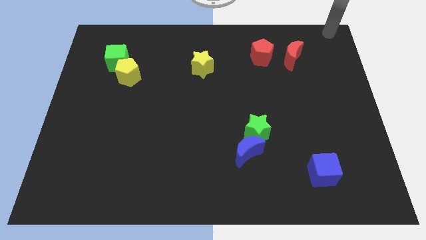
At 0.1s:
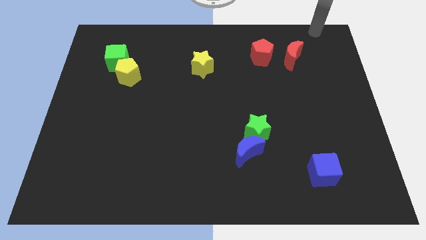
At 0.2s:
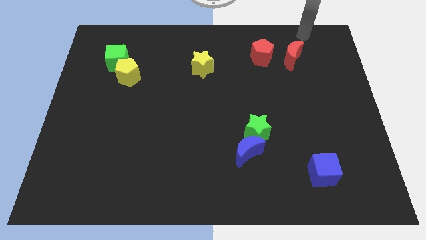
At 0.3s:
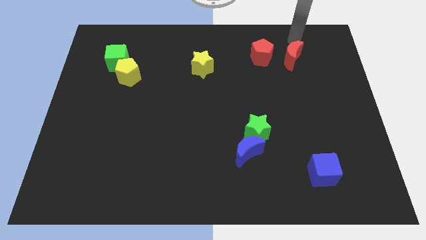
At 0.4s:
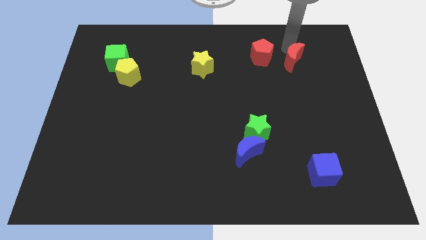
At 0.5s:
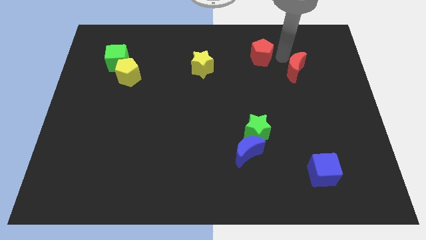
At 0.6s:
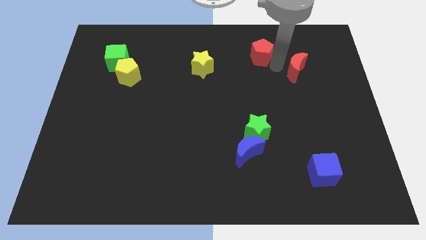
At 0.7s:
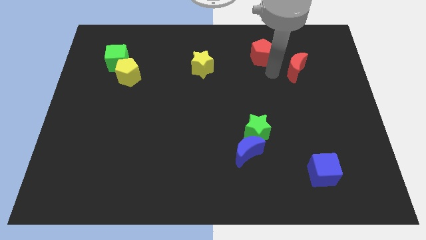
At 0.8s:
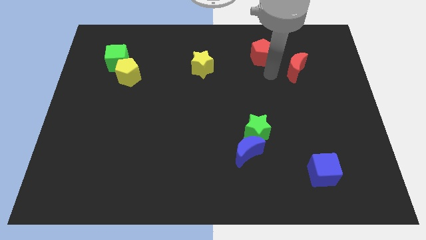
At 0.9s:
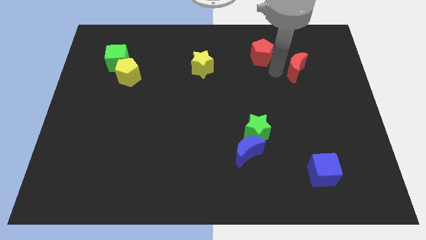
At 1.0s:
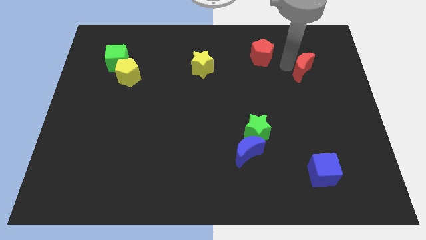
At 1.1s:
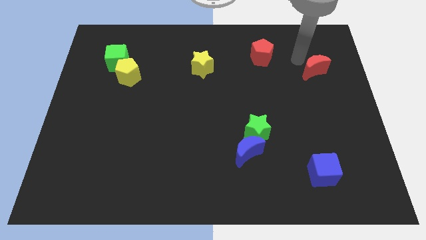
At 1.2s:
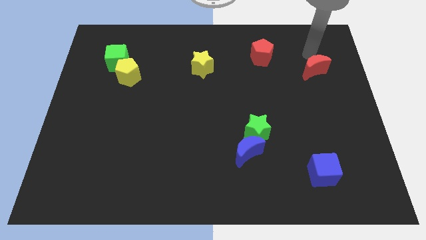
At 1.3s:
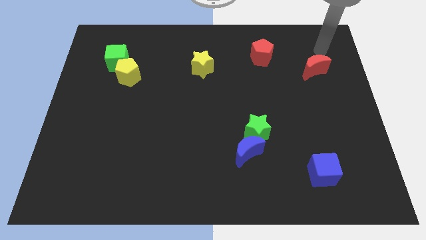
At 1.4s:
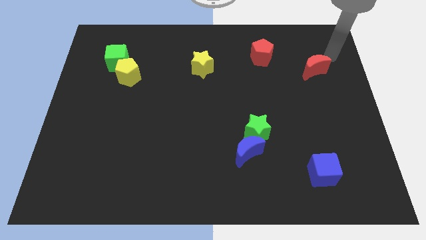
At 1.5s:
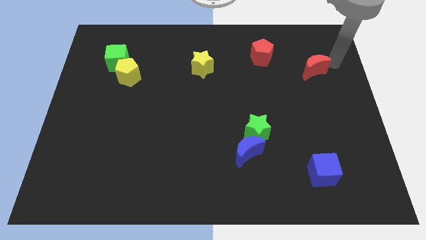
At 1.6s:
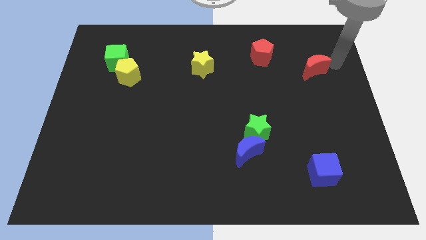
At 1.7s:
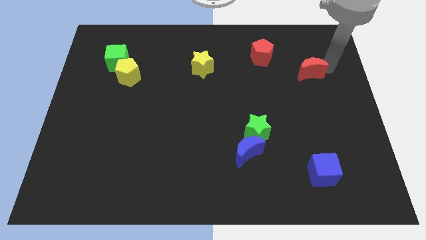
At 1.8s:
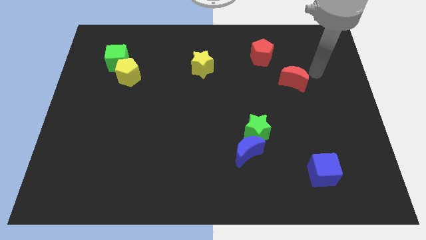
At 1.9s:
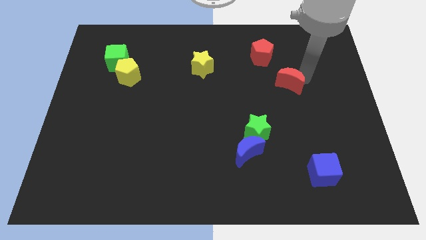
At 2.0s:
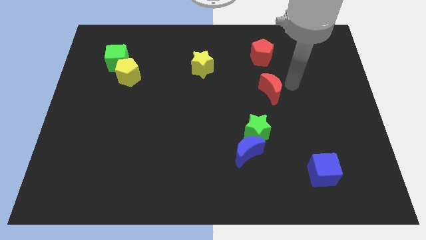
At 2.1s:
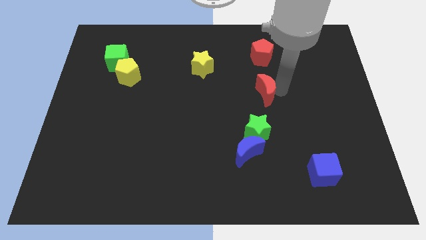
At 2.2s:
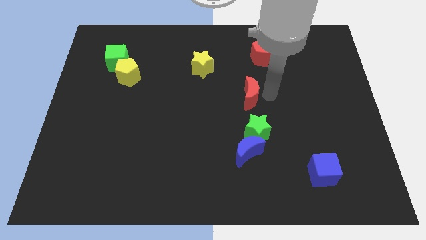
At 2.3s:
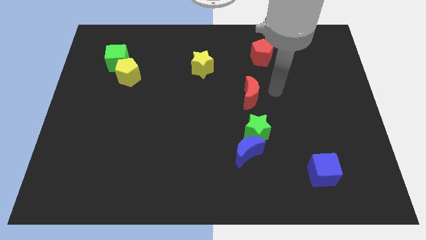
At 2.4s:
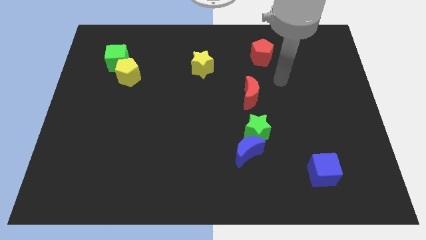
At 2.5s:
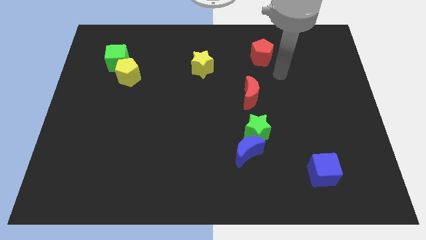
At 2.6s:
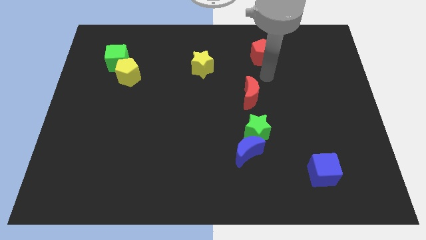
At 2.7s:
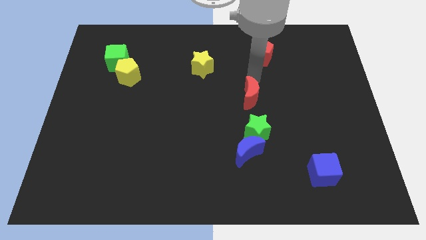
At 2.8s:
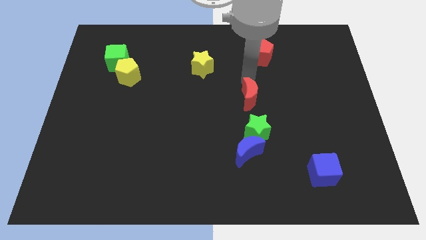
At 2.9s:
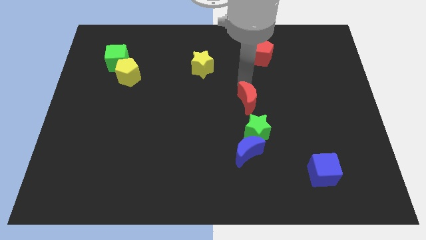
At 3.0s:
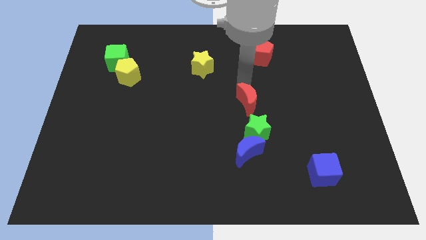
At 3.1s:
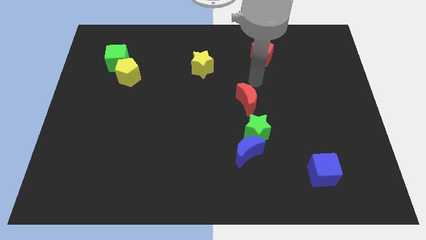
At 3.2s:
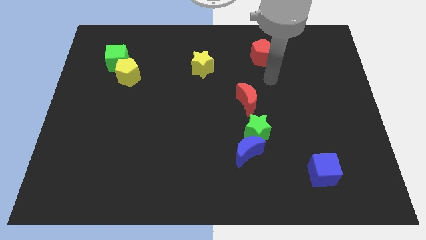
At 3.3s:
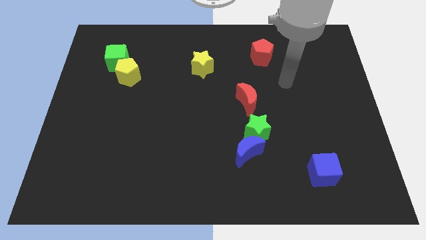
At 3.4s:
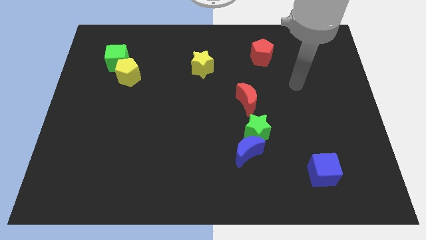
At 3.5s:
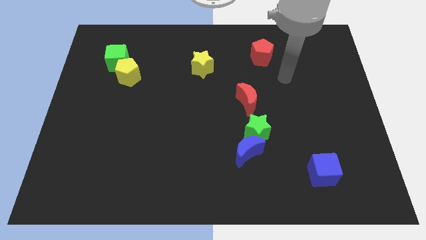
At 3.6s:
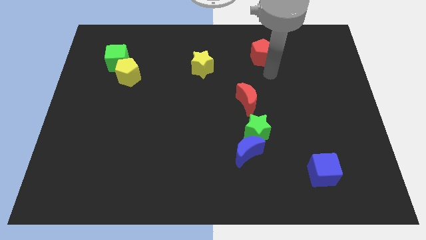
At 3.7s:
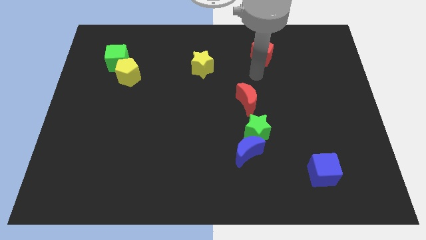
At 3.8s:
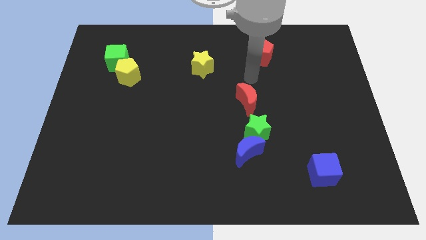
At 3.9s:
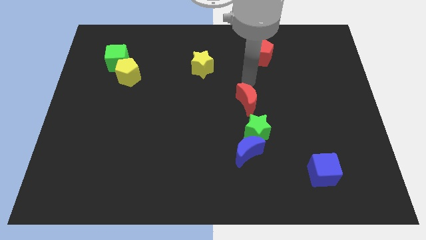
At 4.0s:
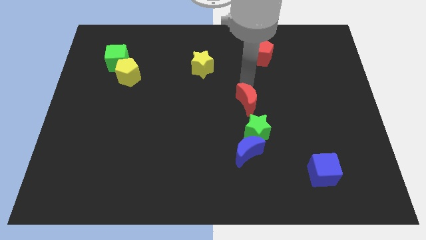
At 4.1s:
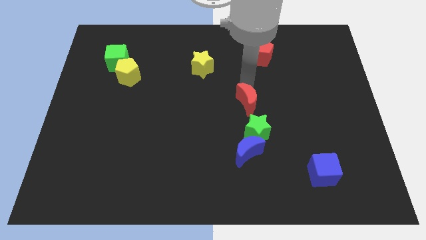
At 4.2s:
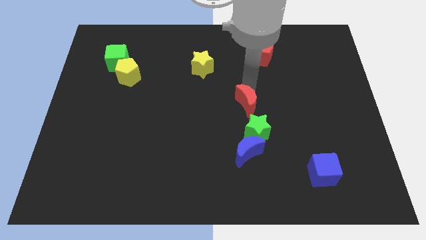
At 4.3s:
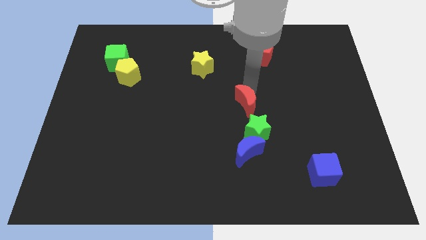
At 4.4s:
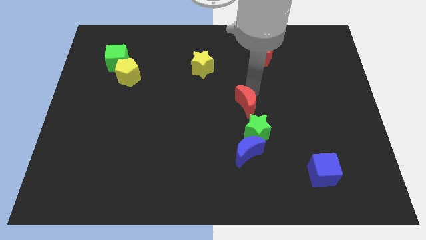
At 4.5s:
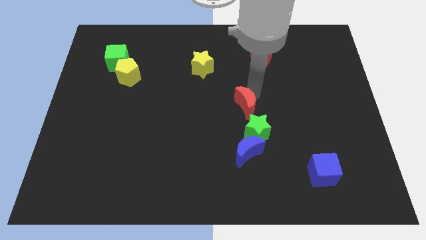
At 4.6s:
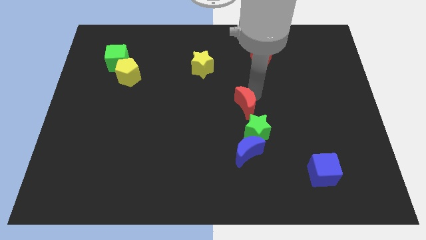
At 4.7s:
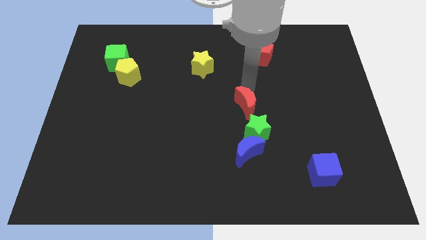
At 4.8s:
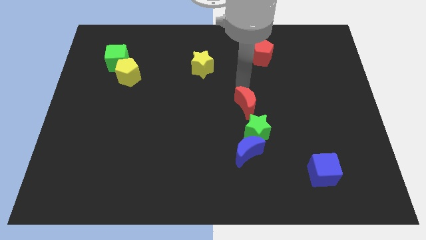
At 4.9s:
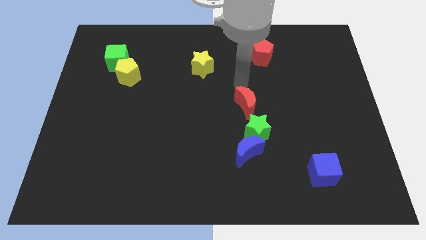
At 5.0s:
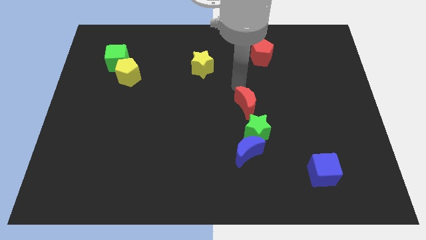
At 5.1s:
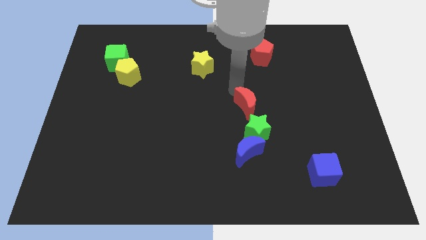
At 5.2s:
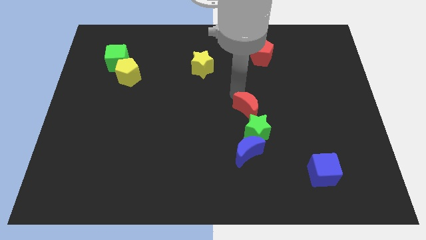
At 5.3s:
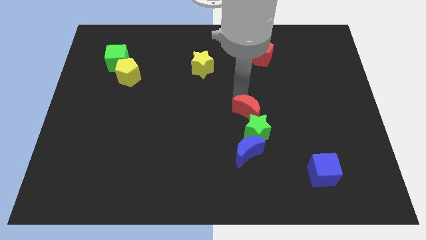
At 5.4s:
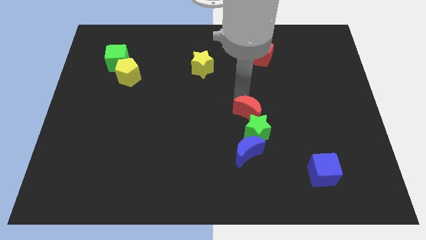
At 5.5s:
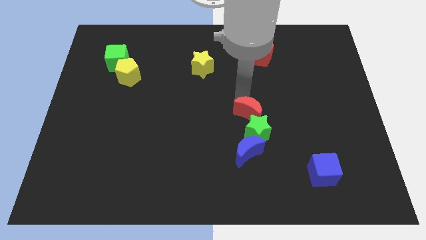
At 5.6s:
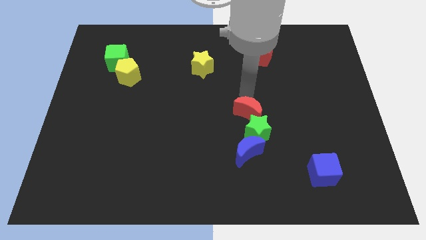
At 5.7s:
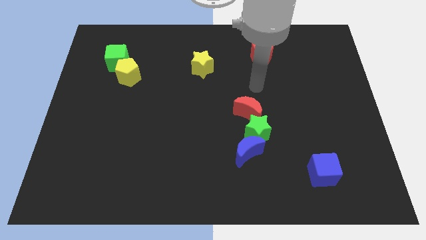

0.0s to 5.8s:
push the red crescent into the green star

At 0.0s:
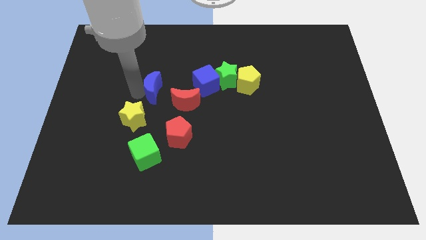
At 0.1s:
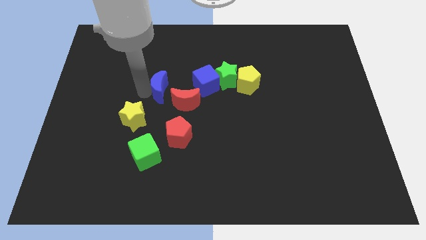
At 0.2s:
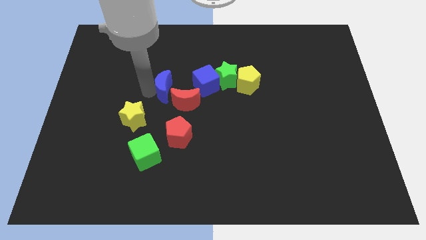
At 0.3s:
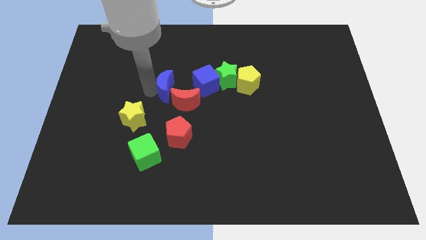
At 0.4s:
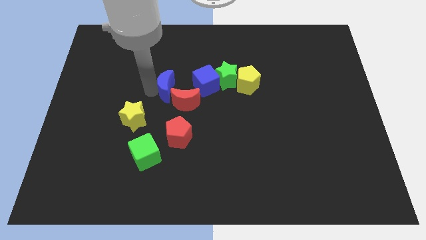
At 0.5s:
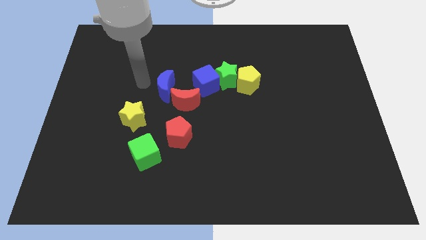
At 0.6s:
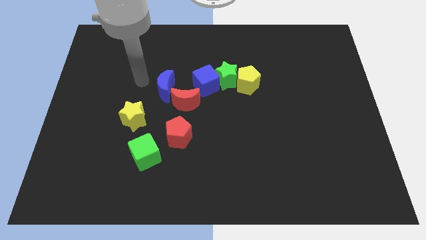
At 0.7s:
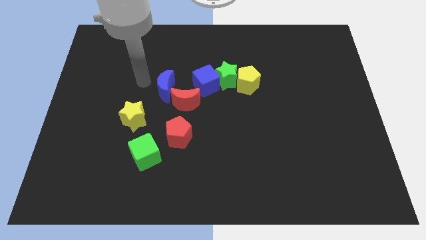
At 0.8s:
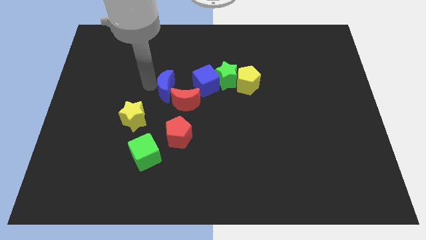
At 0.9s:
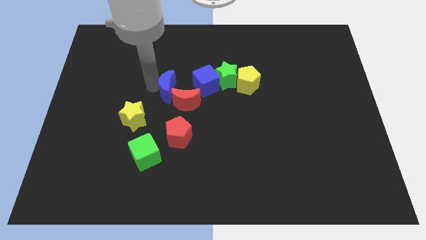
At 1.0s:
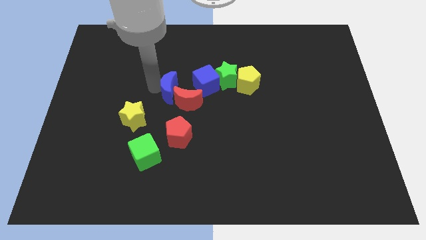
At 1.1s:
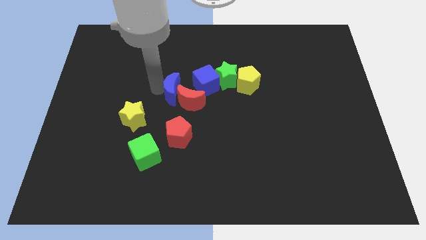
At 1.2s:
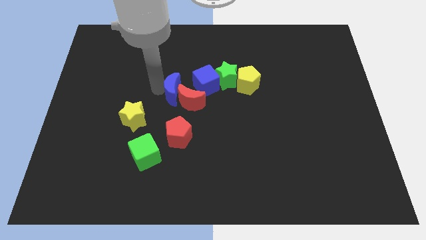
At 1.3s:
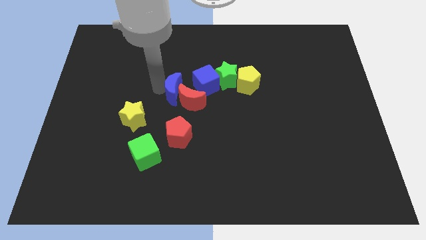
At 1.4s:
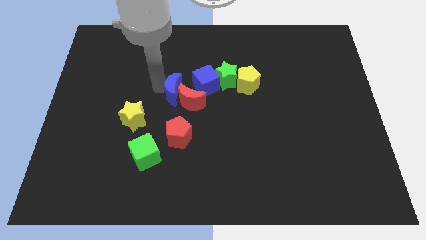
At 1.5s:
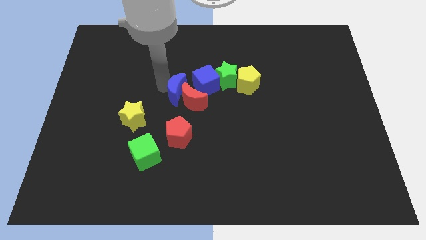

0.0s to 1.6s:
drag the blue moon into the red moon

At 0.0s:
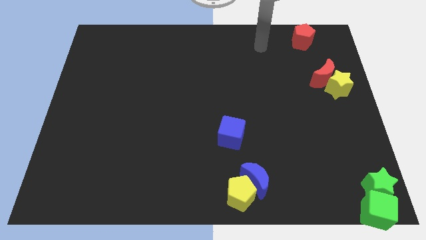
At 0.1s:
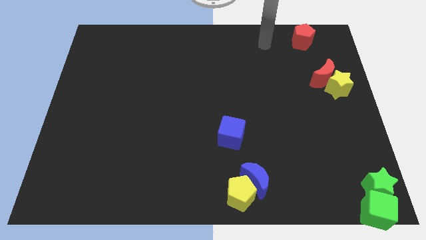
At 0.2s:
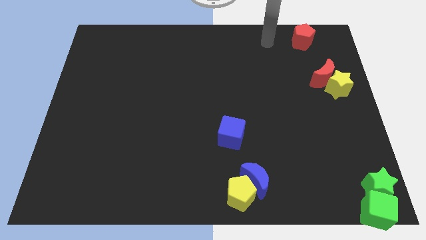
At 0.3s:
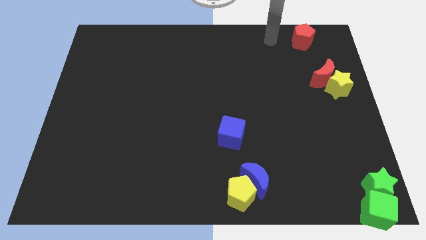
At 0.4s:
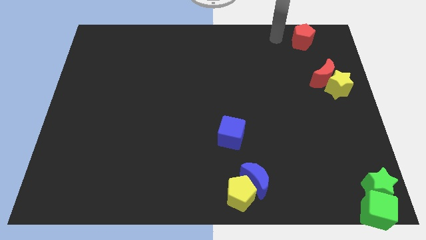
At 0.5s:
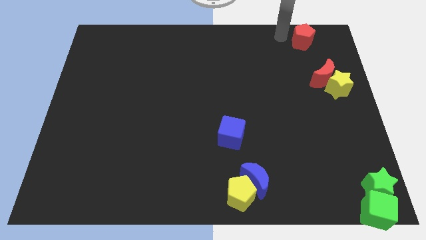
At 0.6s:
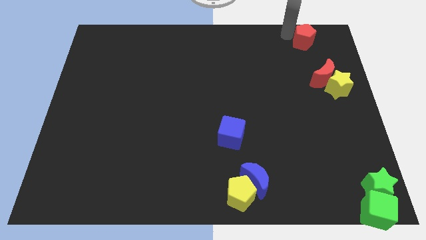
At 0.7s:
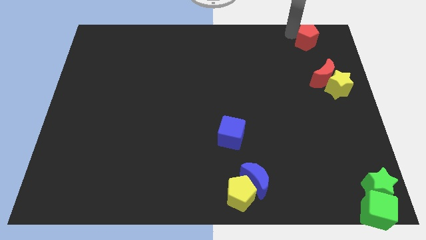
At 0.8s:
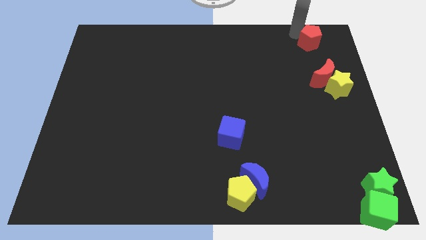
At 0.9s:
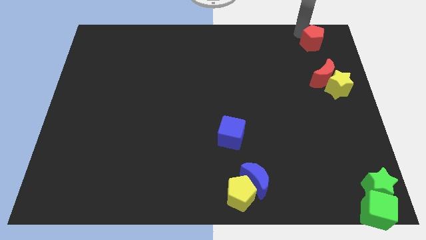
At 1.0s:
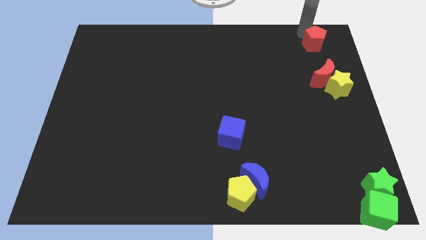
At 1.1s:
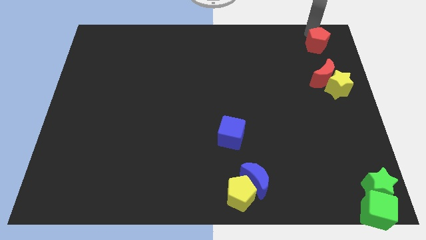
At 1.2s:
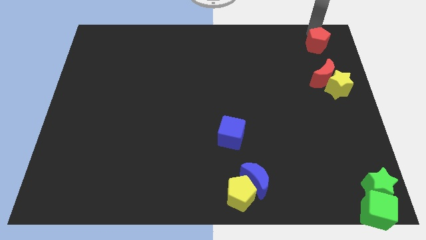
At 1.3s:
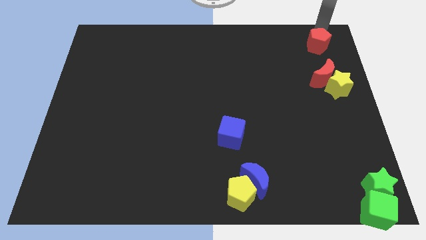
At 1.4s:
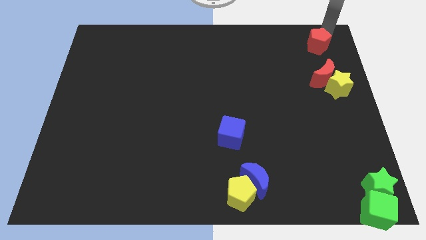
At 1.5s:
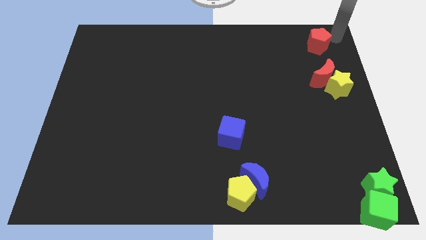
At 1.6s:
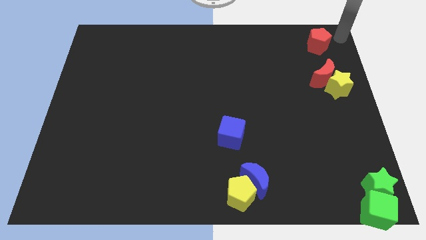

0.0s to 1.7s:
move the red pentagon slightly to the right
